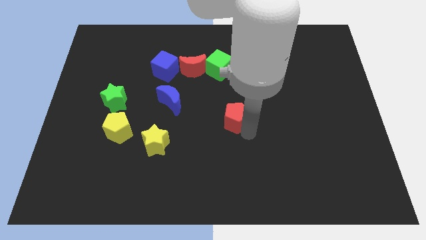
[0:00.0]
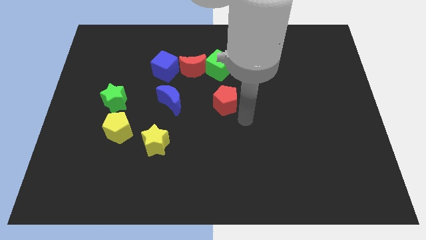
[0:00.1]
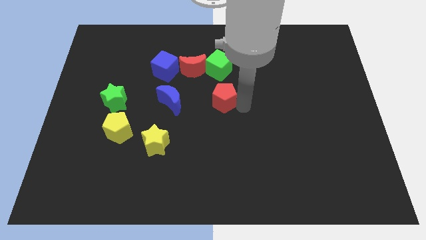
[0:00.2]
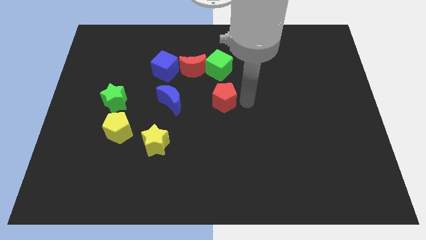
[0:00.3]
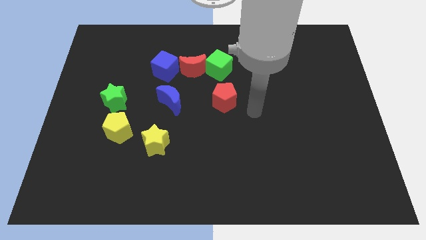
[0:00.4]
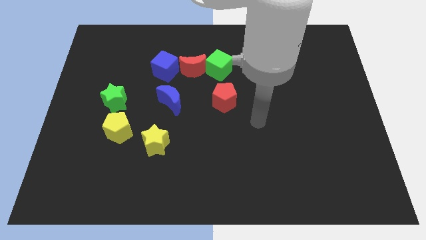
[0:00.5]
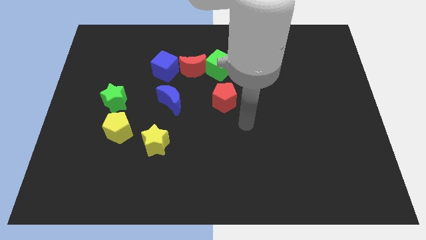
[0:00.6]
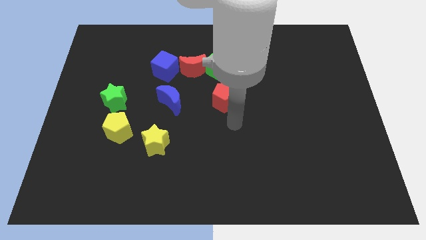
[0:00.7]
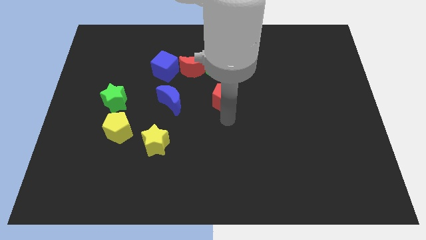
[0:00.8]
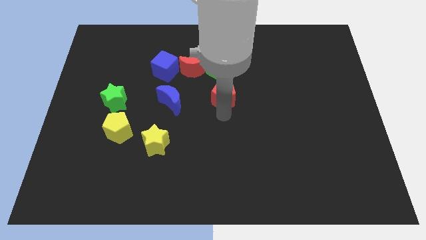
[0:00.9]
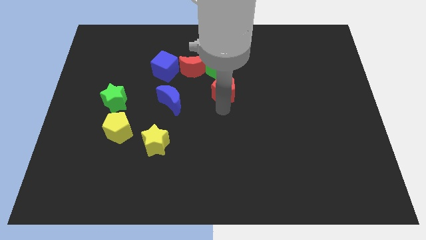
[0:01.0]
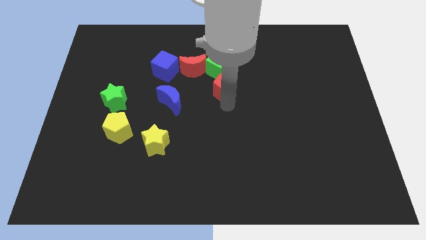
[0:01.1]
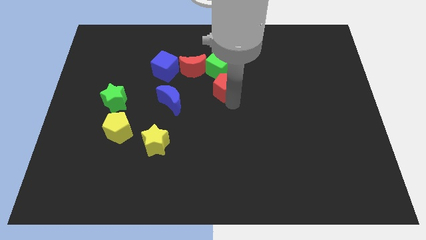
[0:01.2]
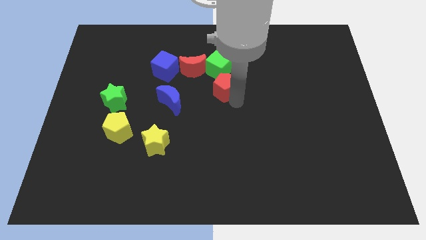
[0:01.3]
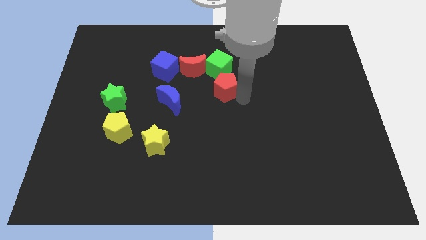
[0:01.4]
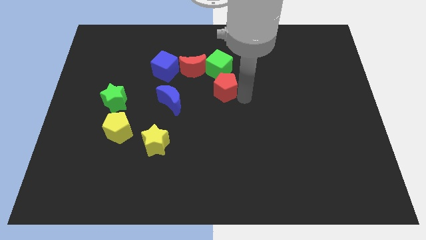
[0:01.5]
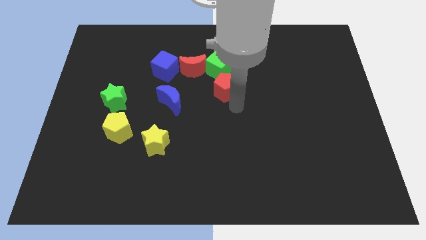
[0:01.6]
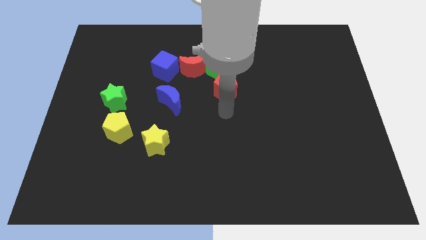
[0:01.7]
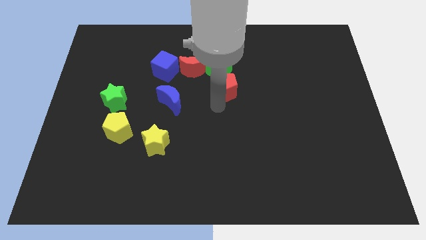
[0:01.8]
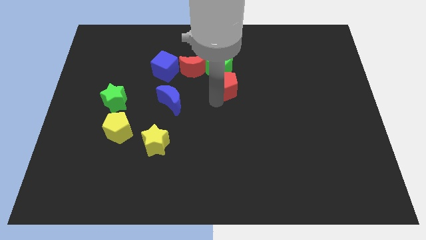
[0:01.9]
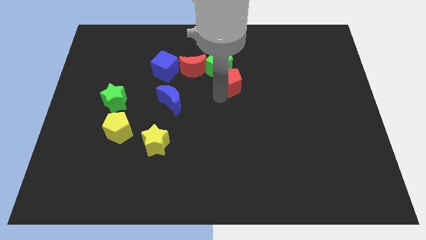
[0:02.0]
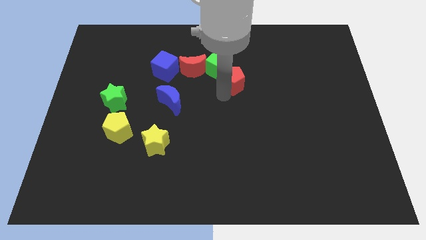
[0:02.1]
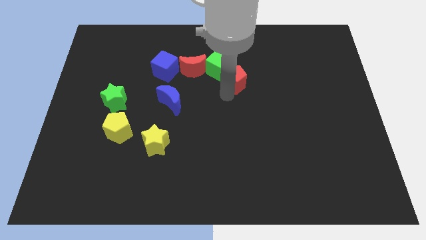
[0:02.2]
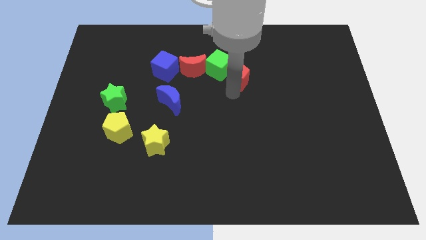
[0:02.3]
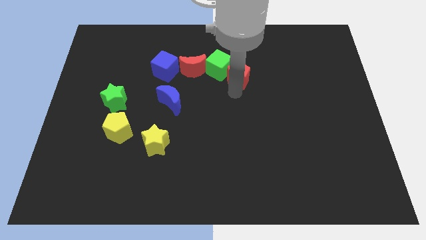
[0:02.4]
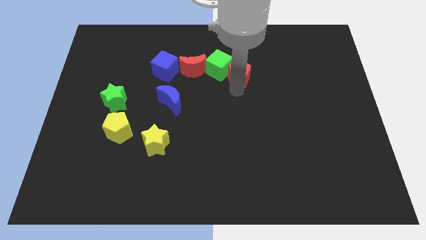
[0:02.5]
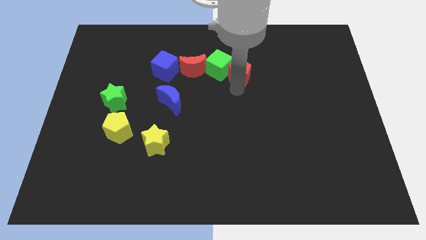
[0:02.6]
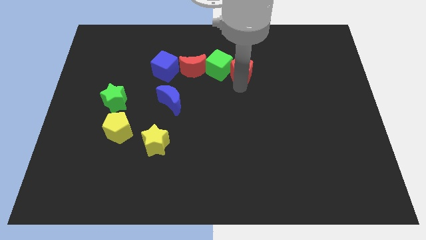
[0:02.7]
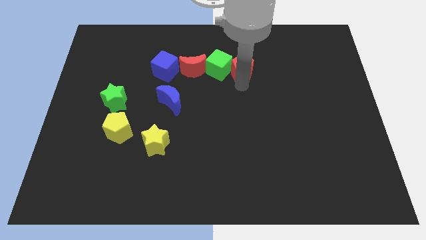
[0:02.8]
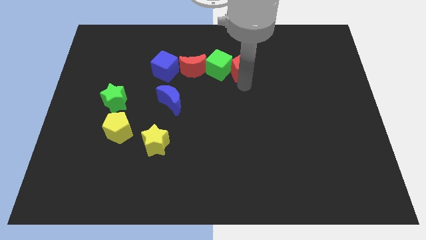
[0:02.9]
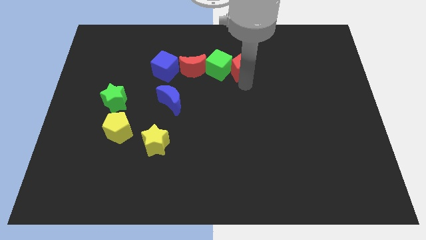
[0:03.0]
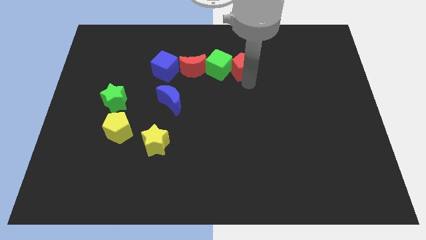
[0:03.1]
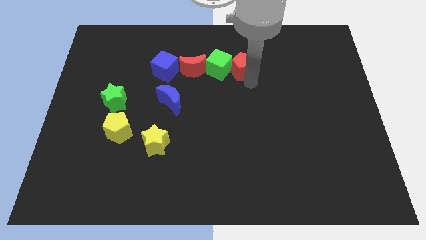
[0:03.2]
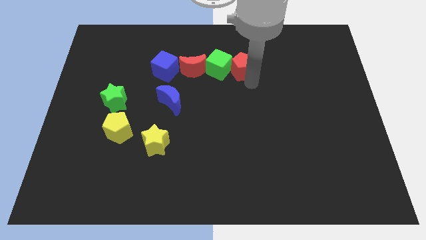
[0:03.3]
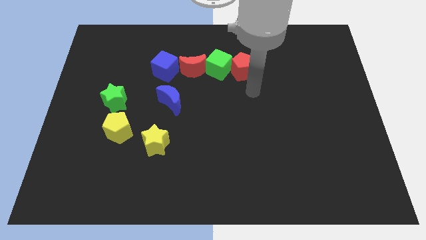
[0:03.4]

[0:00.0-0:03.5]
place the red pentagon right to the green cube

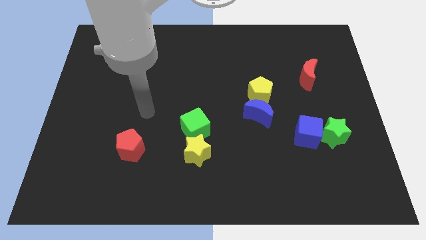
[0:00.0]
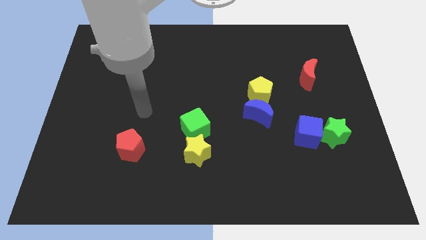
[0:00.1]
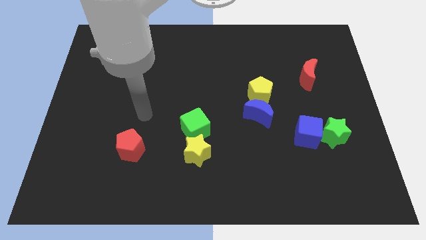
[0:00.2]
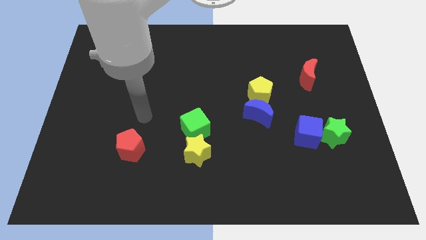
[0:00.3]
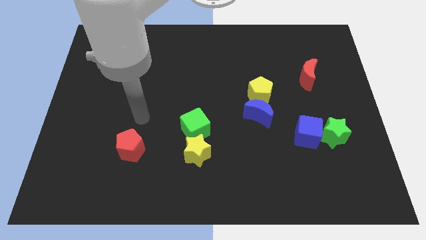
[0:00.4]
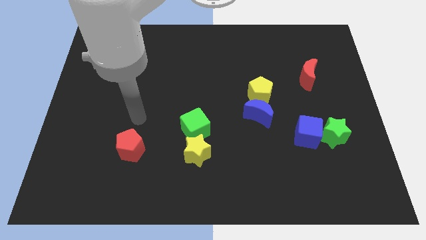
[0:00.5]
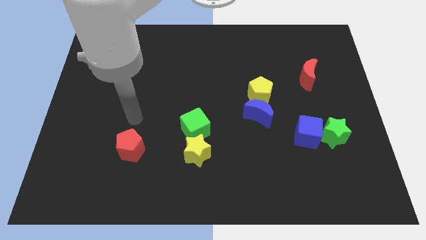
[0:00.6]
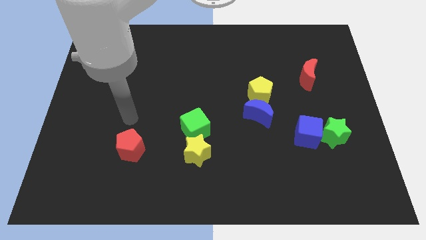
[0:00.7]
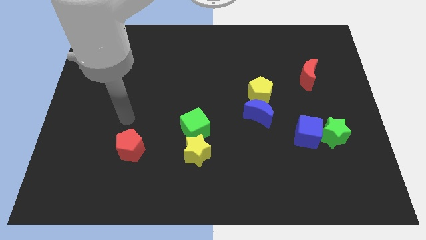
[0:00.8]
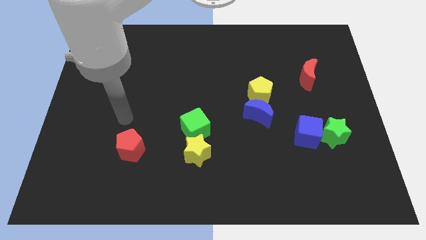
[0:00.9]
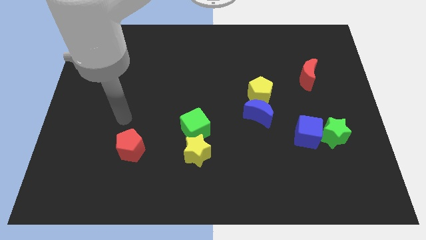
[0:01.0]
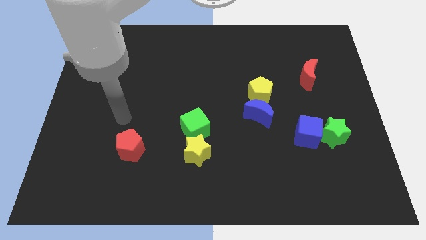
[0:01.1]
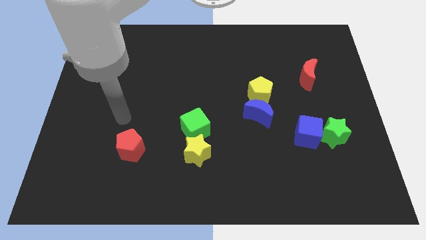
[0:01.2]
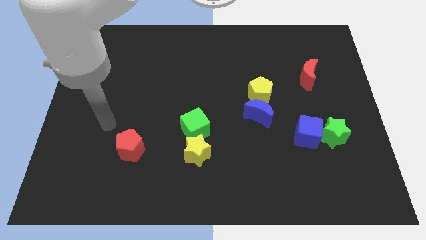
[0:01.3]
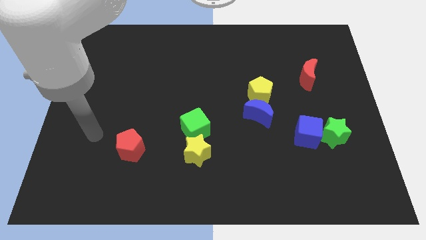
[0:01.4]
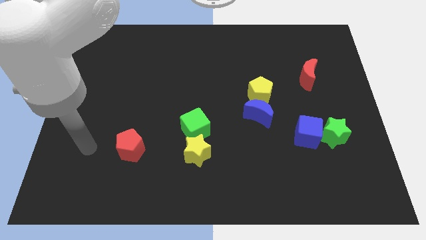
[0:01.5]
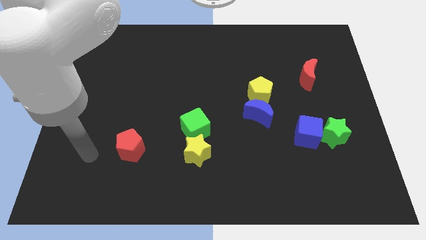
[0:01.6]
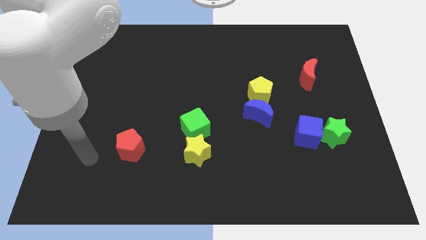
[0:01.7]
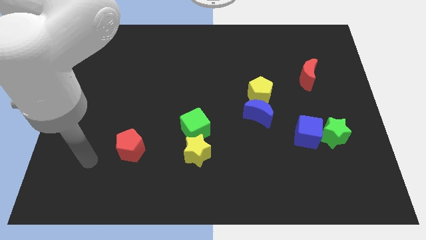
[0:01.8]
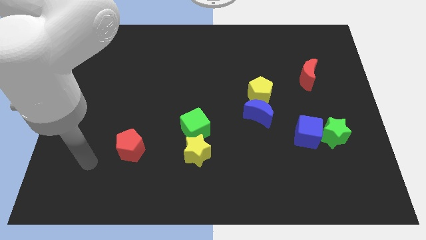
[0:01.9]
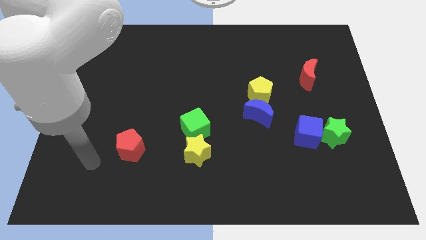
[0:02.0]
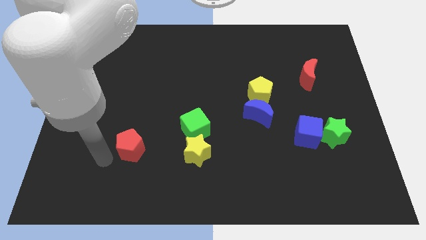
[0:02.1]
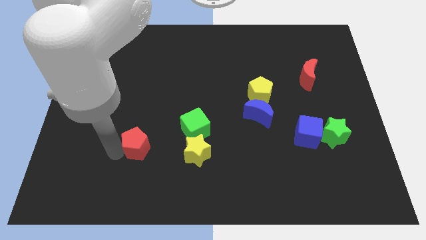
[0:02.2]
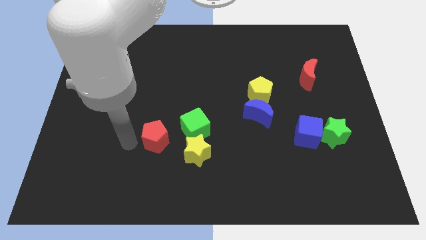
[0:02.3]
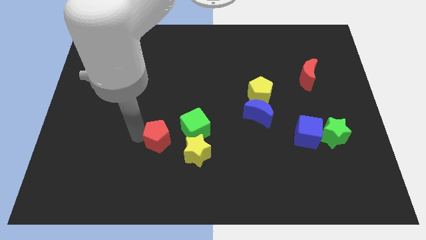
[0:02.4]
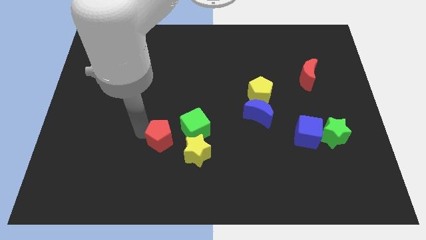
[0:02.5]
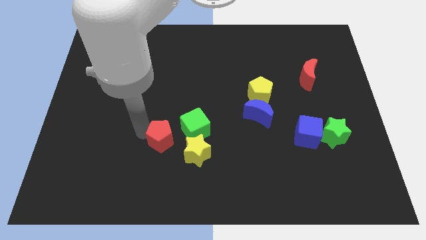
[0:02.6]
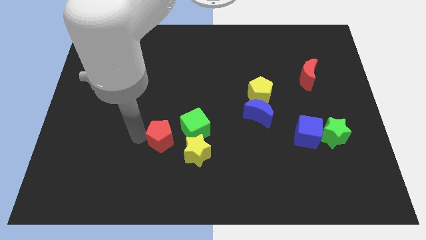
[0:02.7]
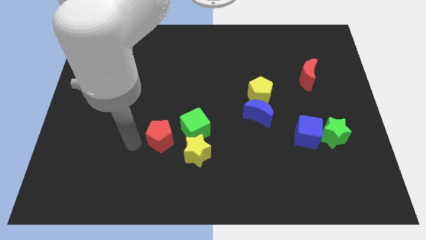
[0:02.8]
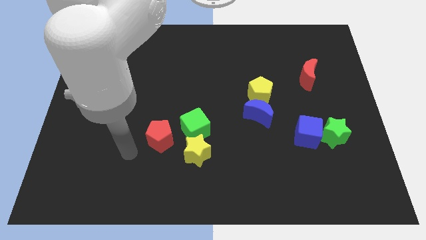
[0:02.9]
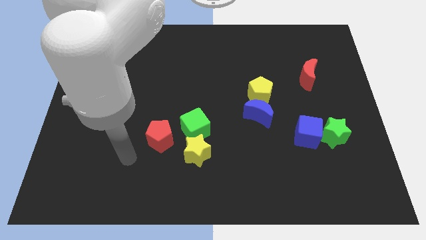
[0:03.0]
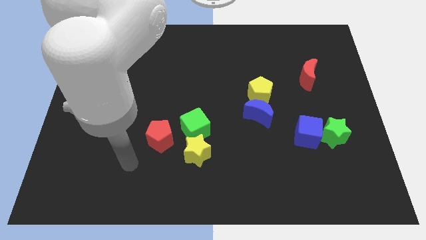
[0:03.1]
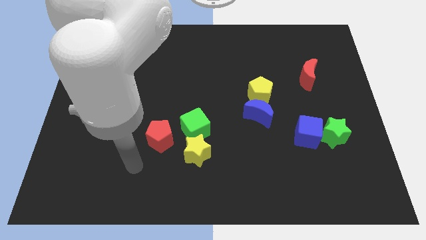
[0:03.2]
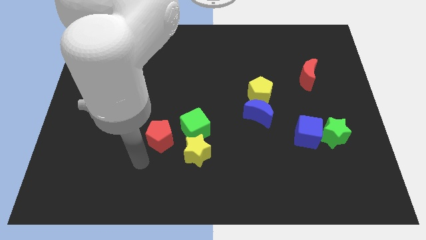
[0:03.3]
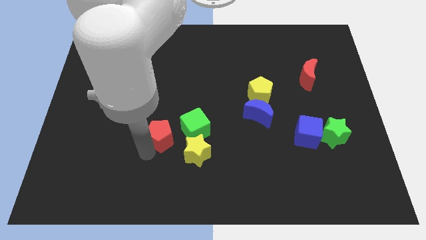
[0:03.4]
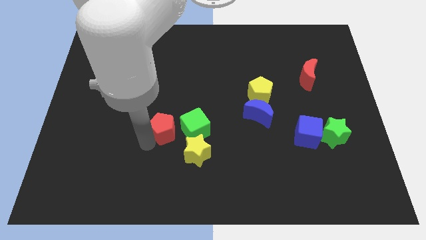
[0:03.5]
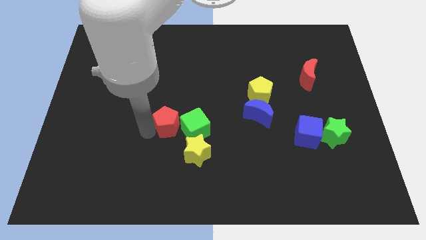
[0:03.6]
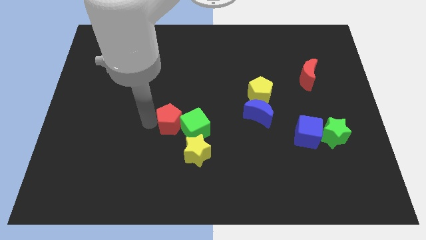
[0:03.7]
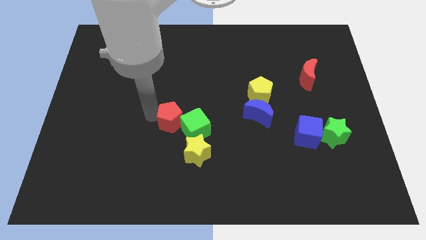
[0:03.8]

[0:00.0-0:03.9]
push the red pentagon into green cube

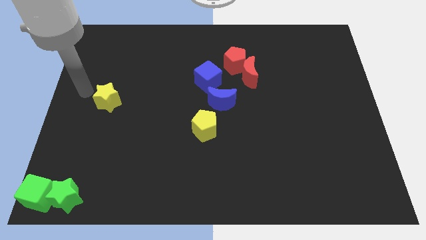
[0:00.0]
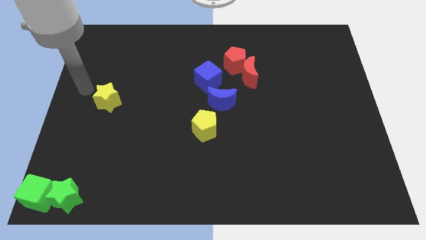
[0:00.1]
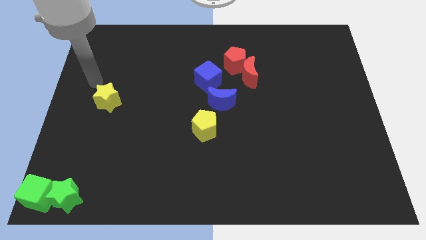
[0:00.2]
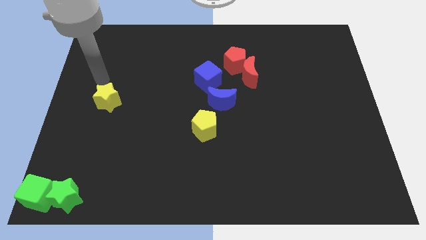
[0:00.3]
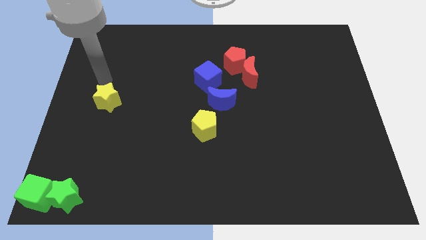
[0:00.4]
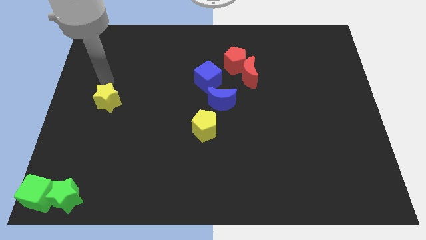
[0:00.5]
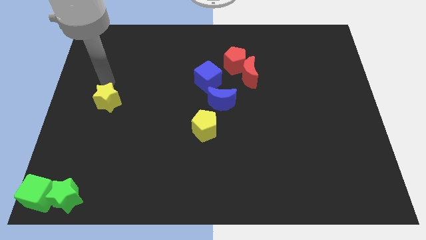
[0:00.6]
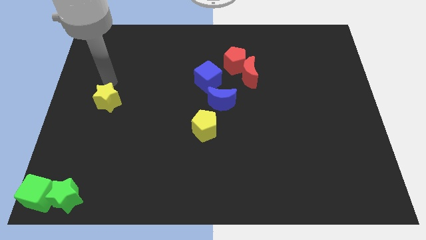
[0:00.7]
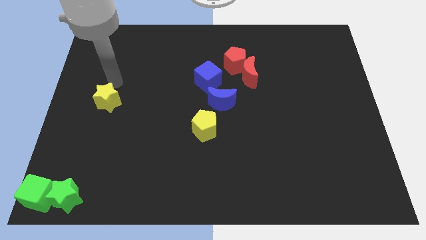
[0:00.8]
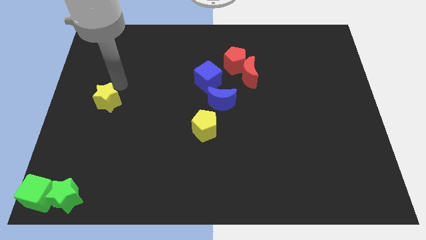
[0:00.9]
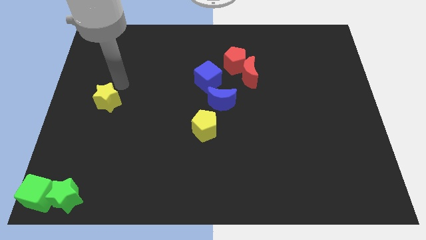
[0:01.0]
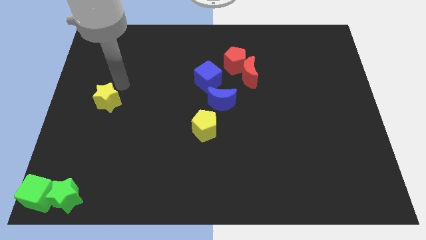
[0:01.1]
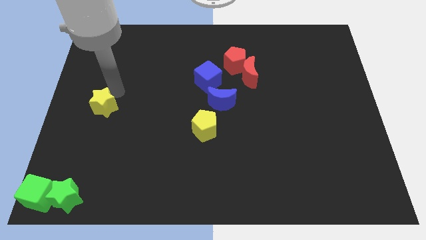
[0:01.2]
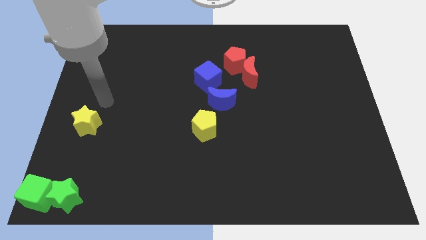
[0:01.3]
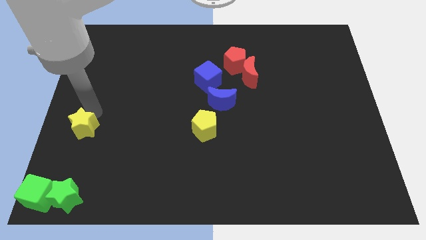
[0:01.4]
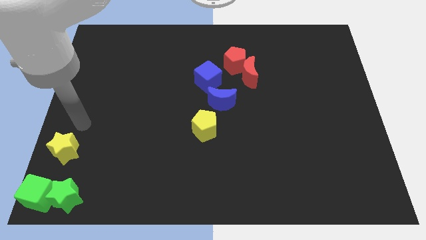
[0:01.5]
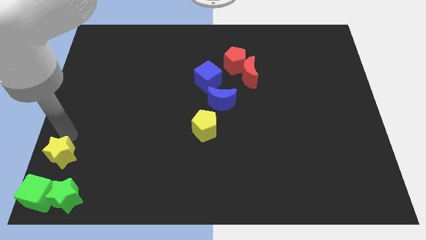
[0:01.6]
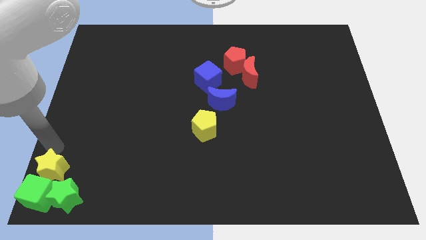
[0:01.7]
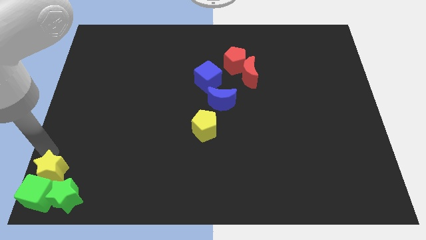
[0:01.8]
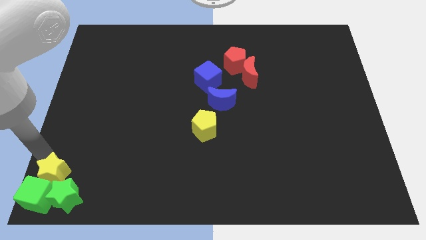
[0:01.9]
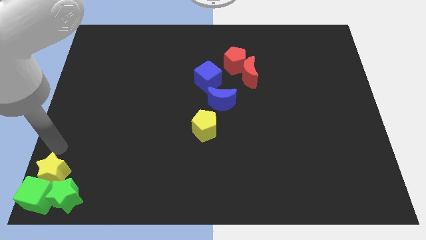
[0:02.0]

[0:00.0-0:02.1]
slide yellow star on top of green blocks
